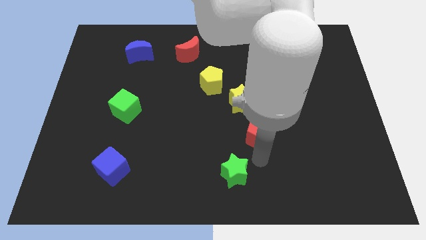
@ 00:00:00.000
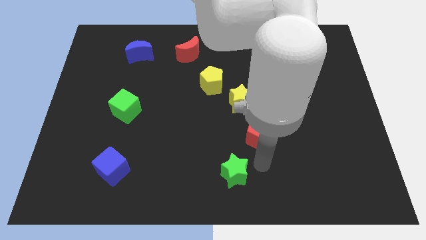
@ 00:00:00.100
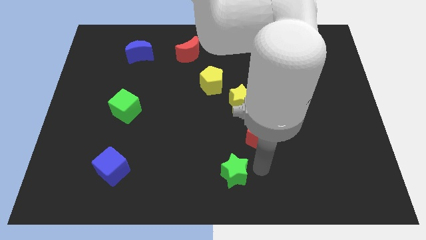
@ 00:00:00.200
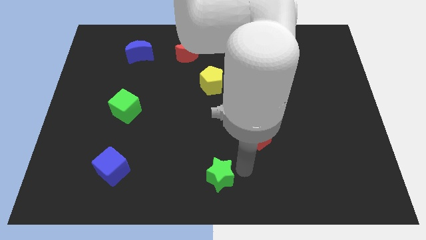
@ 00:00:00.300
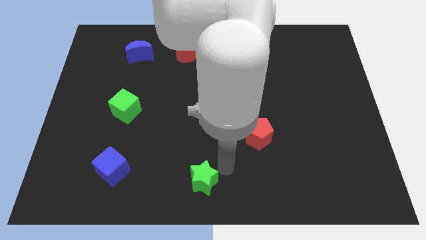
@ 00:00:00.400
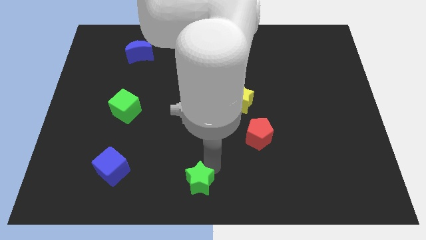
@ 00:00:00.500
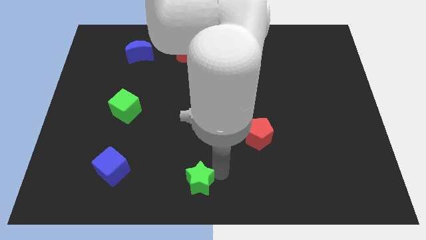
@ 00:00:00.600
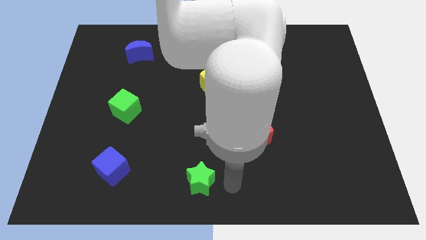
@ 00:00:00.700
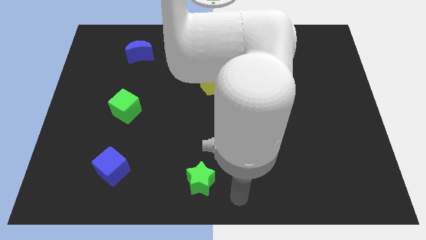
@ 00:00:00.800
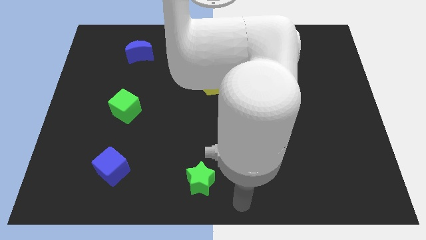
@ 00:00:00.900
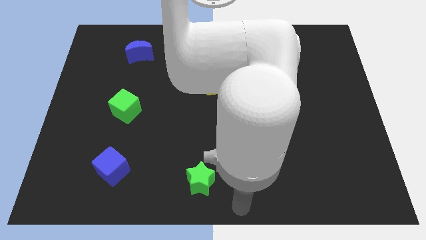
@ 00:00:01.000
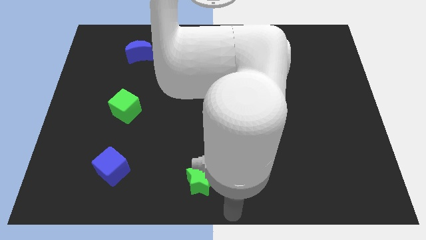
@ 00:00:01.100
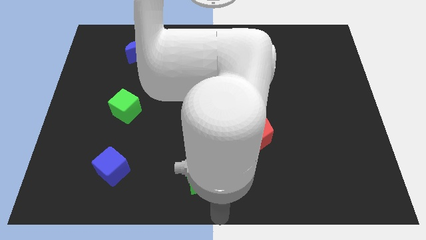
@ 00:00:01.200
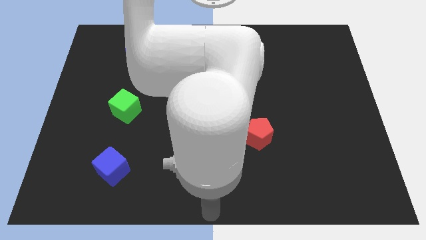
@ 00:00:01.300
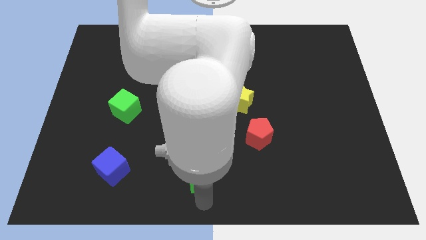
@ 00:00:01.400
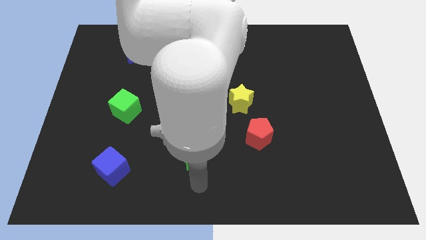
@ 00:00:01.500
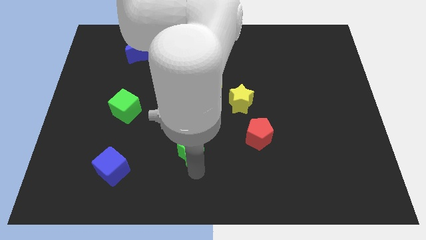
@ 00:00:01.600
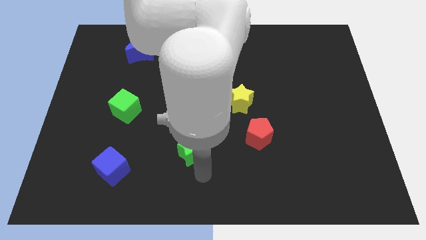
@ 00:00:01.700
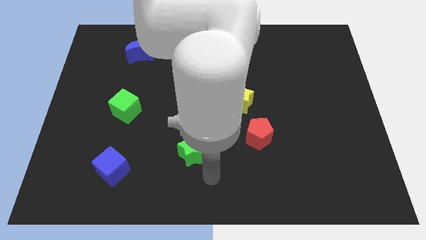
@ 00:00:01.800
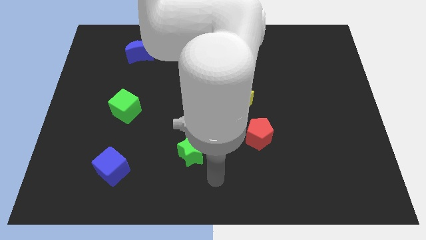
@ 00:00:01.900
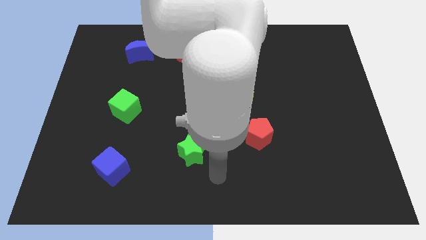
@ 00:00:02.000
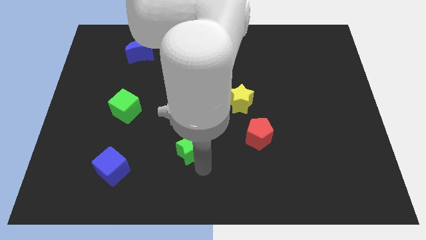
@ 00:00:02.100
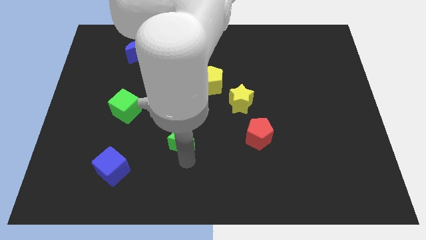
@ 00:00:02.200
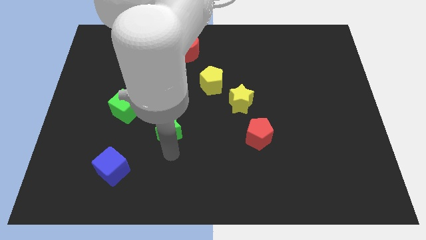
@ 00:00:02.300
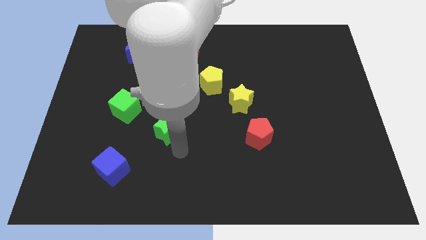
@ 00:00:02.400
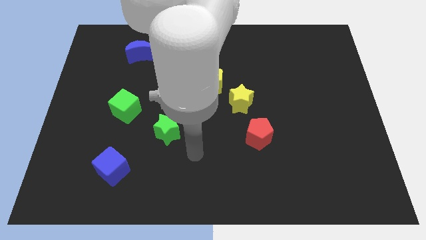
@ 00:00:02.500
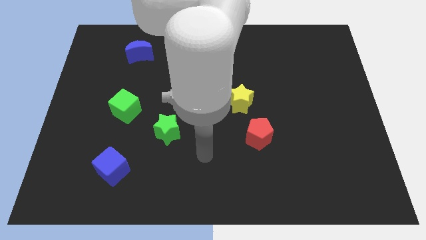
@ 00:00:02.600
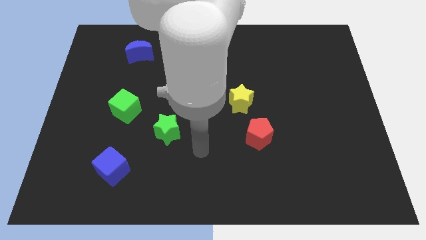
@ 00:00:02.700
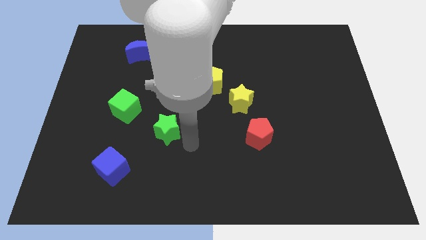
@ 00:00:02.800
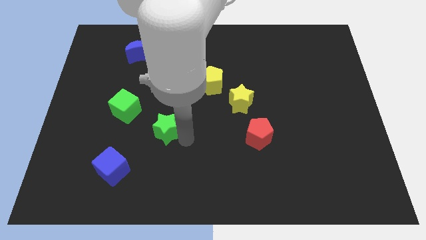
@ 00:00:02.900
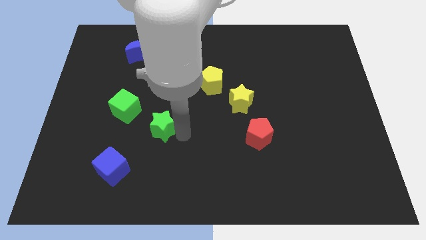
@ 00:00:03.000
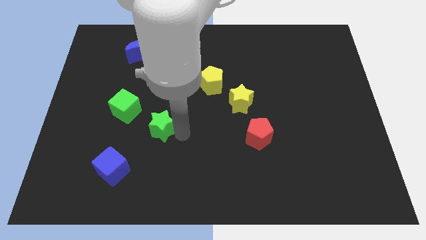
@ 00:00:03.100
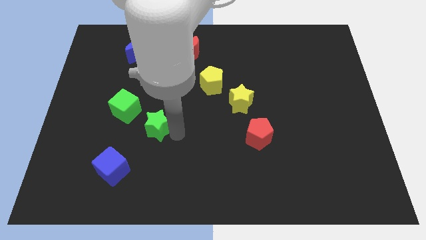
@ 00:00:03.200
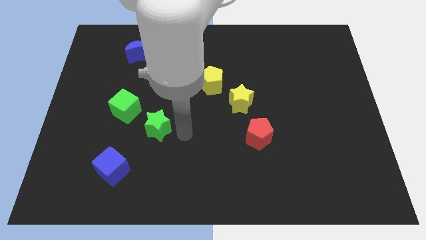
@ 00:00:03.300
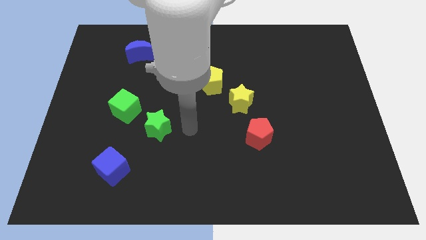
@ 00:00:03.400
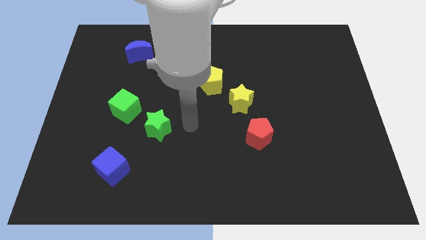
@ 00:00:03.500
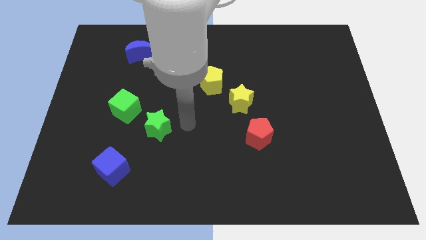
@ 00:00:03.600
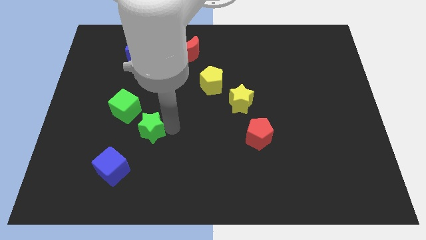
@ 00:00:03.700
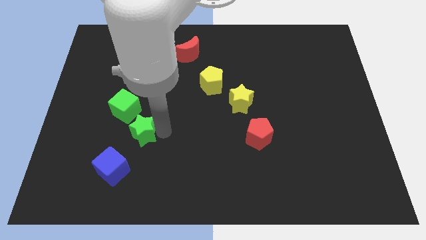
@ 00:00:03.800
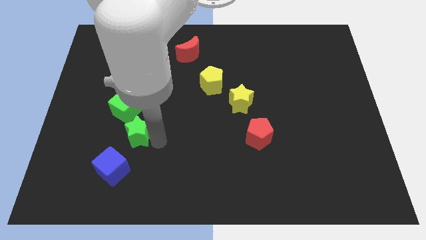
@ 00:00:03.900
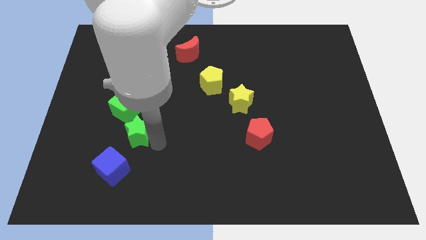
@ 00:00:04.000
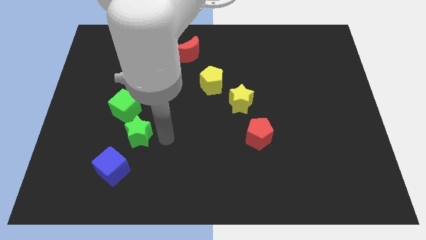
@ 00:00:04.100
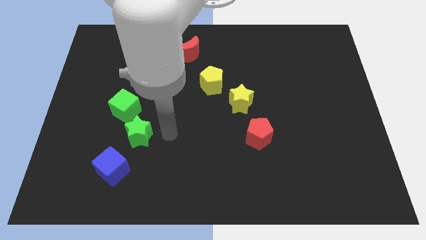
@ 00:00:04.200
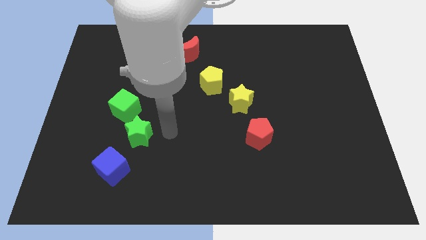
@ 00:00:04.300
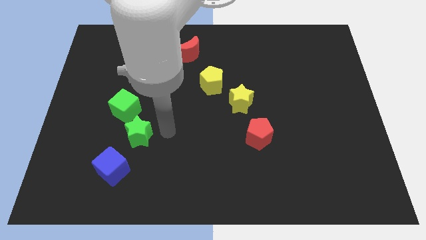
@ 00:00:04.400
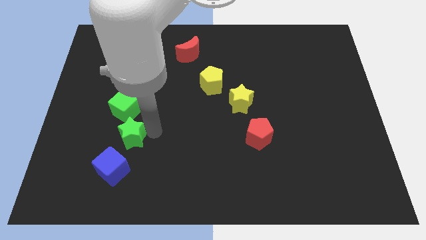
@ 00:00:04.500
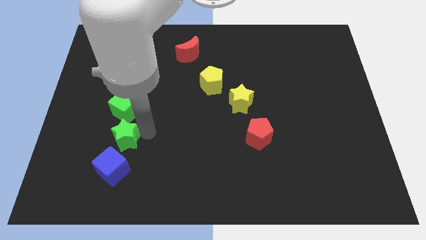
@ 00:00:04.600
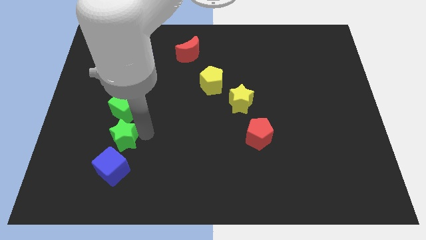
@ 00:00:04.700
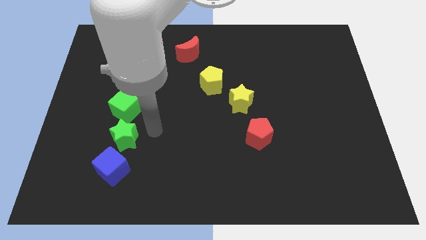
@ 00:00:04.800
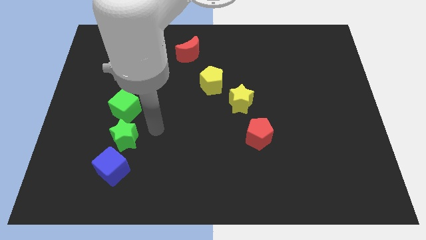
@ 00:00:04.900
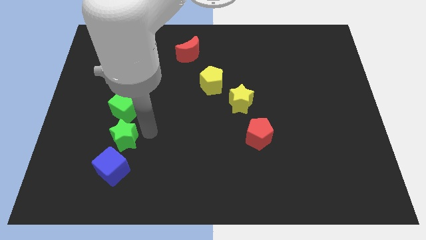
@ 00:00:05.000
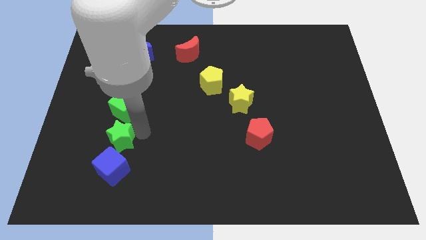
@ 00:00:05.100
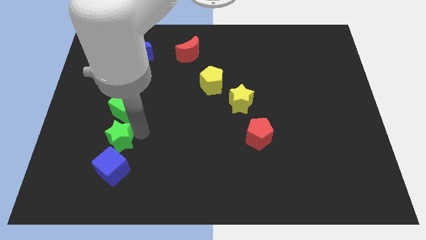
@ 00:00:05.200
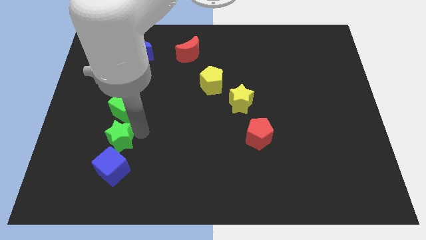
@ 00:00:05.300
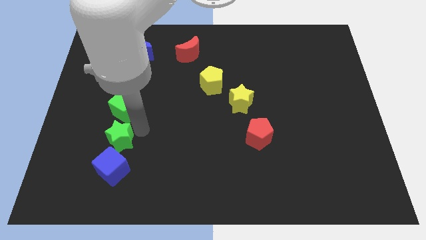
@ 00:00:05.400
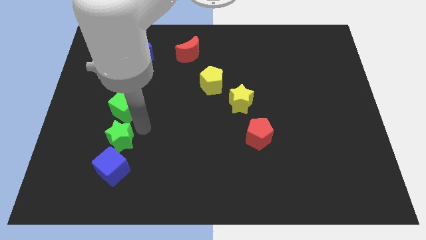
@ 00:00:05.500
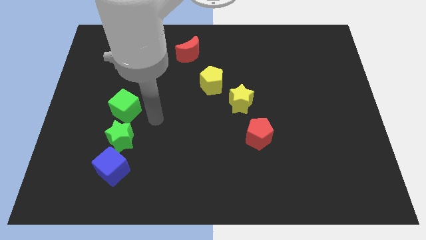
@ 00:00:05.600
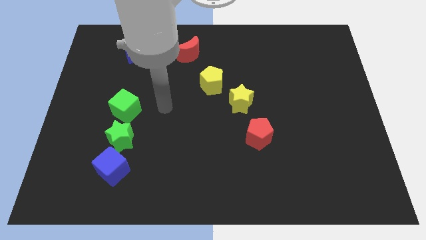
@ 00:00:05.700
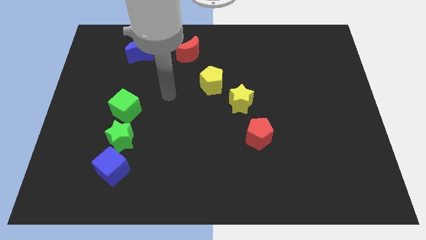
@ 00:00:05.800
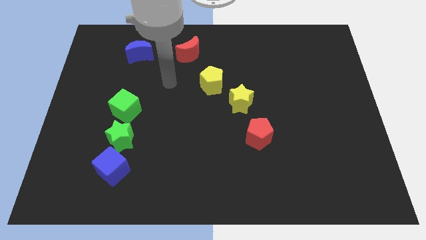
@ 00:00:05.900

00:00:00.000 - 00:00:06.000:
put the green star to the bottom side of the green cube

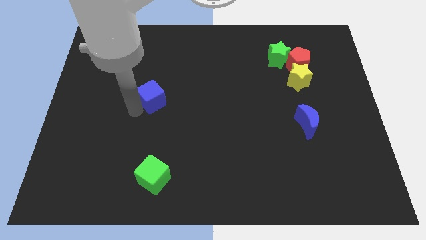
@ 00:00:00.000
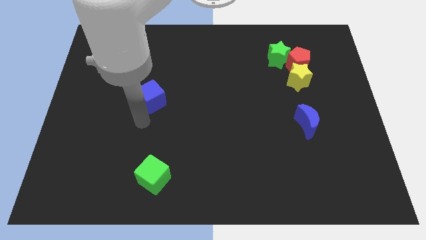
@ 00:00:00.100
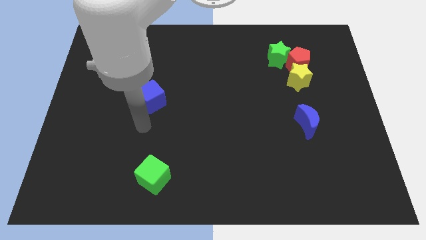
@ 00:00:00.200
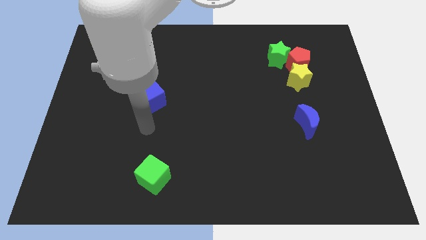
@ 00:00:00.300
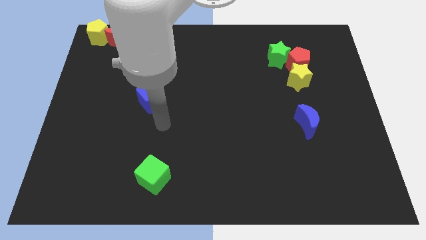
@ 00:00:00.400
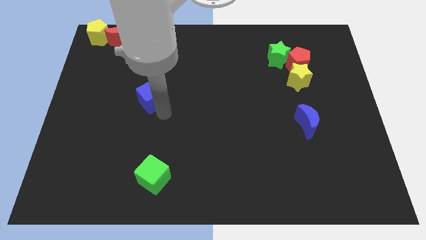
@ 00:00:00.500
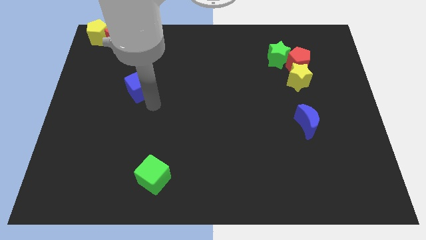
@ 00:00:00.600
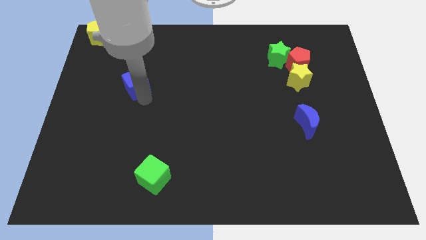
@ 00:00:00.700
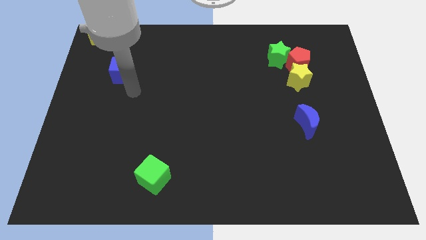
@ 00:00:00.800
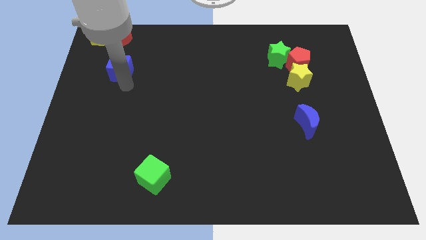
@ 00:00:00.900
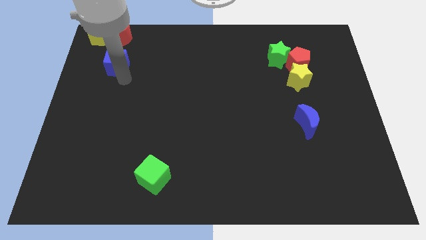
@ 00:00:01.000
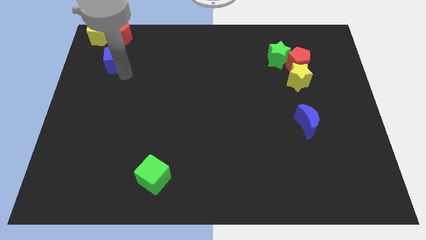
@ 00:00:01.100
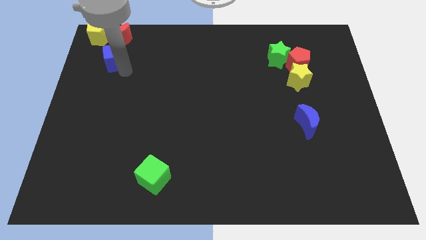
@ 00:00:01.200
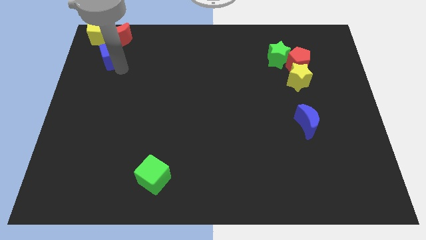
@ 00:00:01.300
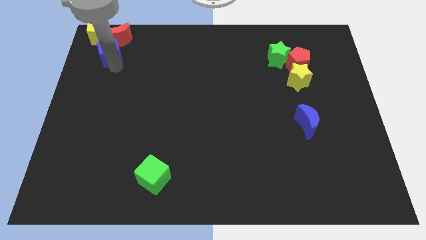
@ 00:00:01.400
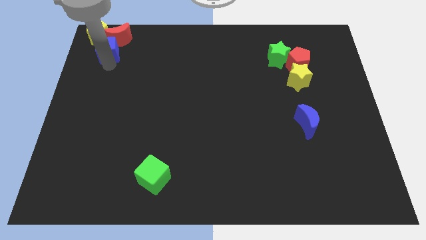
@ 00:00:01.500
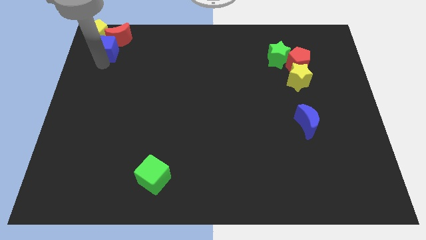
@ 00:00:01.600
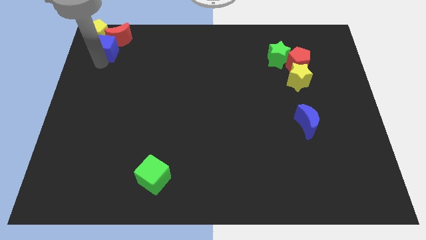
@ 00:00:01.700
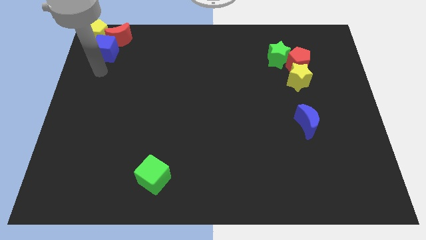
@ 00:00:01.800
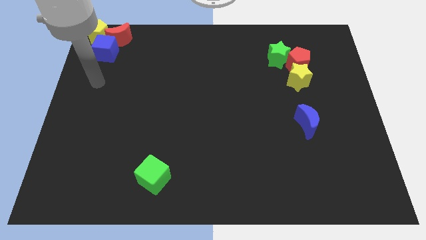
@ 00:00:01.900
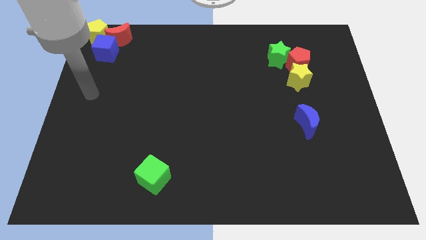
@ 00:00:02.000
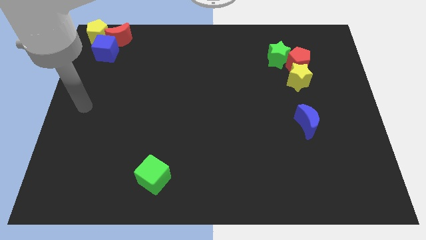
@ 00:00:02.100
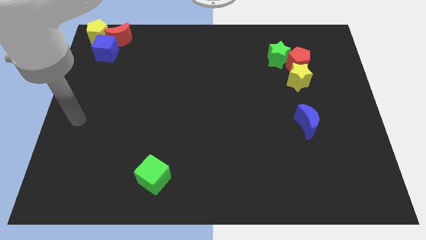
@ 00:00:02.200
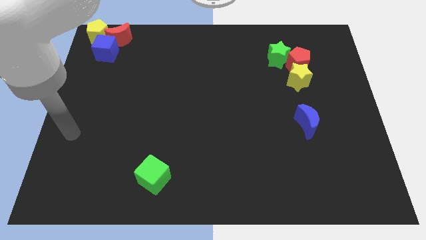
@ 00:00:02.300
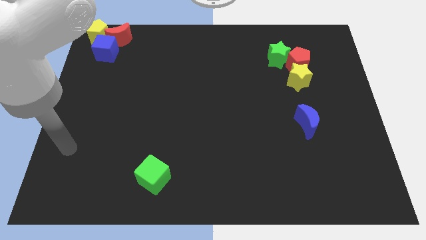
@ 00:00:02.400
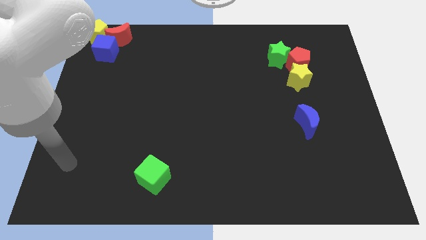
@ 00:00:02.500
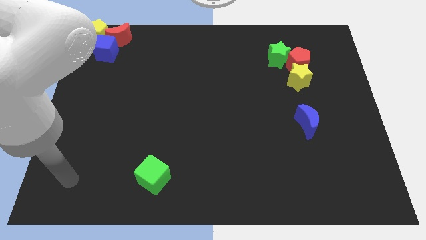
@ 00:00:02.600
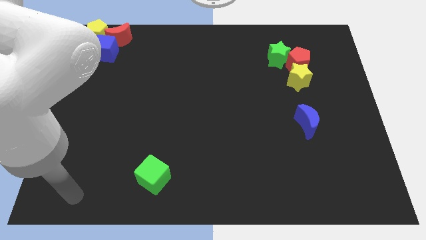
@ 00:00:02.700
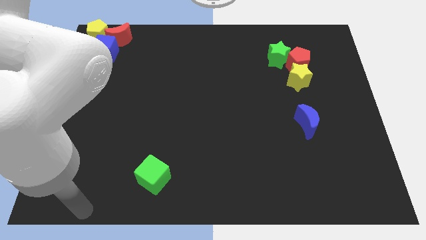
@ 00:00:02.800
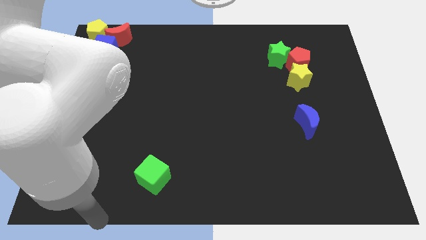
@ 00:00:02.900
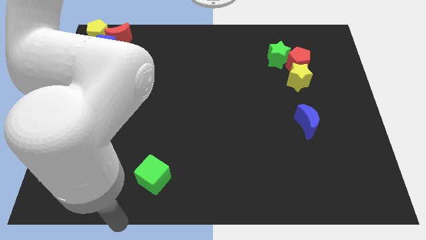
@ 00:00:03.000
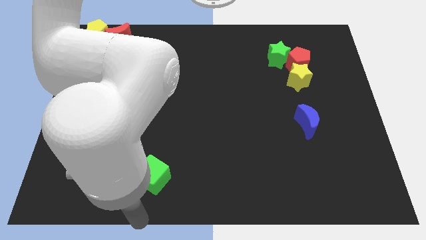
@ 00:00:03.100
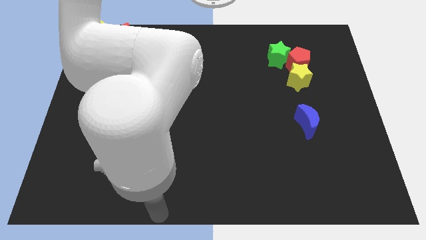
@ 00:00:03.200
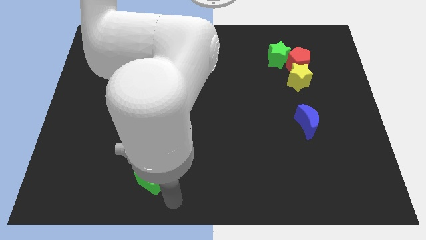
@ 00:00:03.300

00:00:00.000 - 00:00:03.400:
move the blue cube into the red moon
